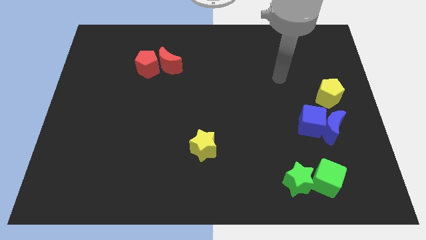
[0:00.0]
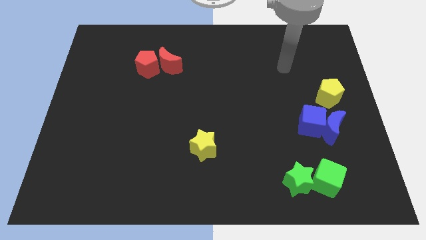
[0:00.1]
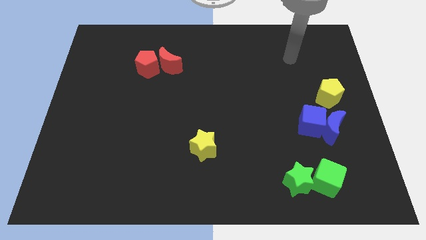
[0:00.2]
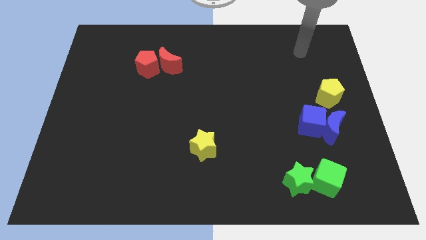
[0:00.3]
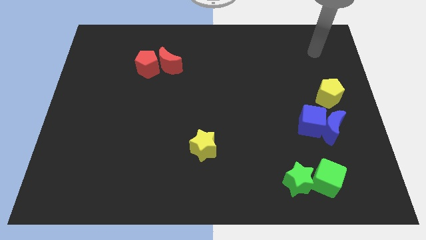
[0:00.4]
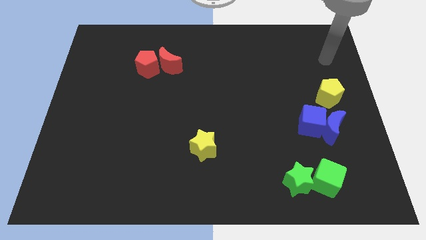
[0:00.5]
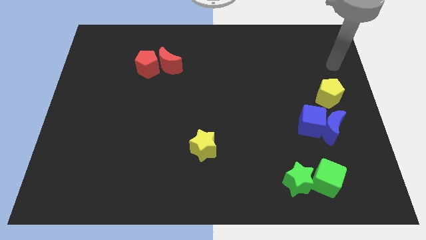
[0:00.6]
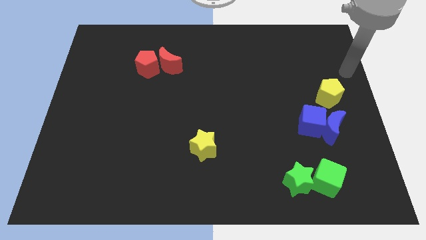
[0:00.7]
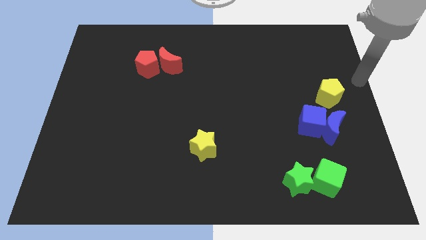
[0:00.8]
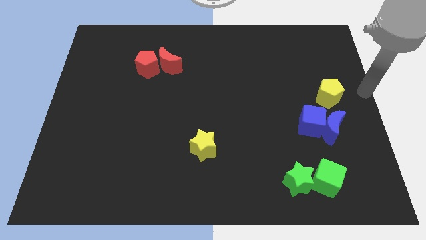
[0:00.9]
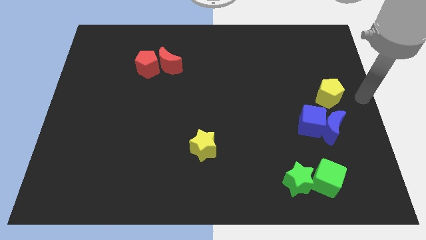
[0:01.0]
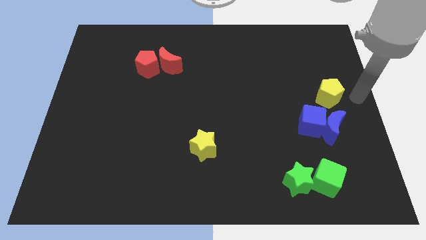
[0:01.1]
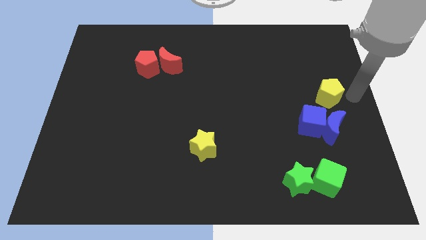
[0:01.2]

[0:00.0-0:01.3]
move your arm right to the yellow pentagon

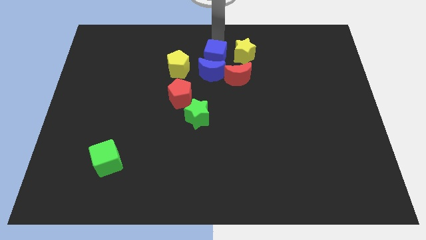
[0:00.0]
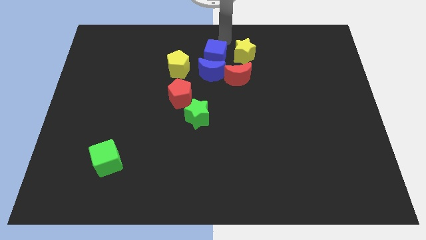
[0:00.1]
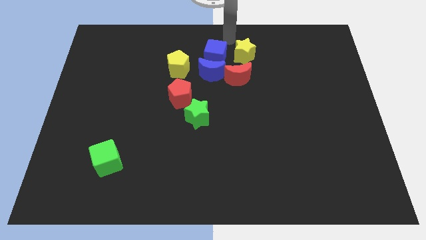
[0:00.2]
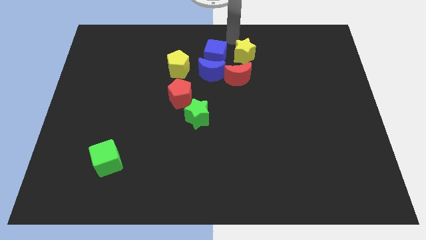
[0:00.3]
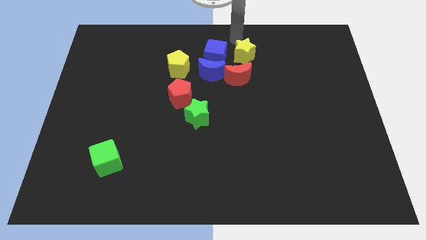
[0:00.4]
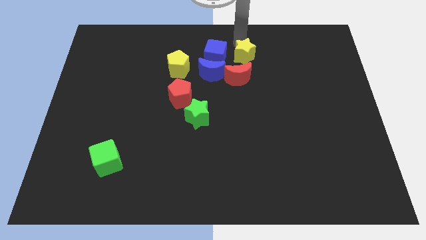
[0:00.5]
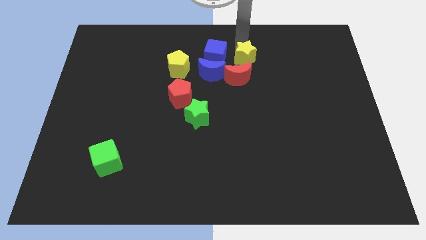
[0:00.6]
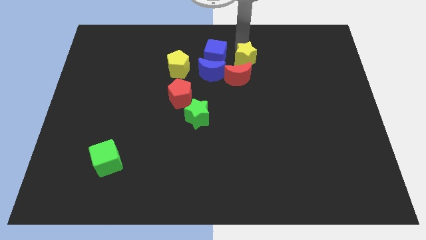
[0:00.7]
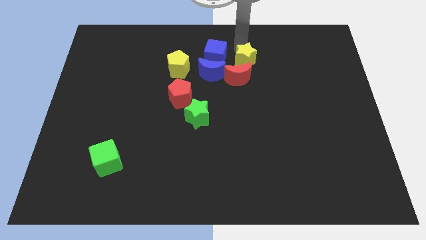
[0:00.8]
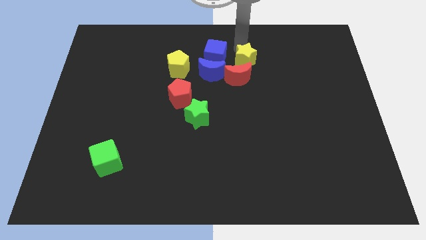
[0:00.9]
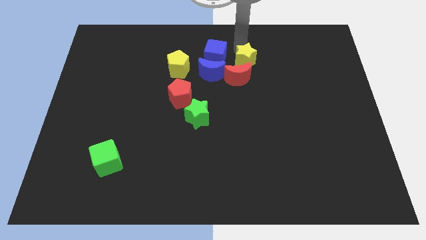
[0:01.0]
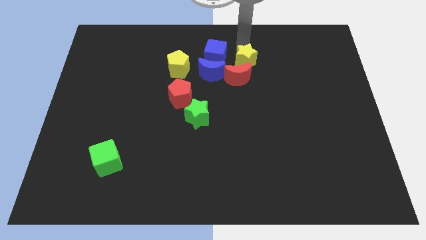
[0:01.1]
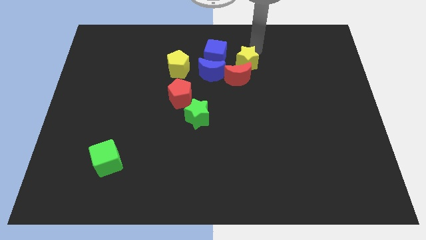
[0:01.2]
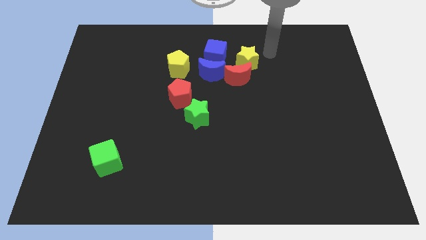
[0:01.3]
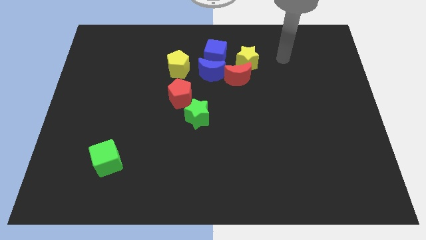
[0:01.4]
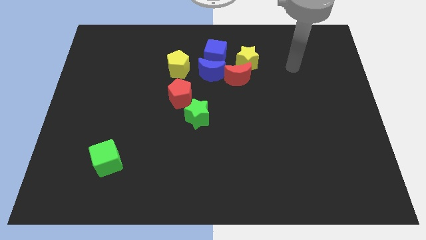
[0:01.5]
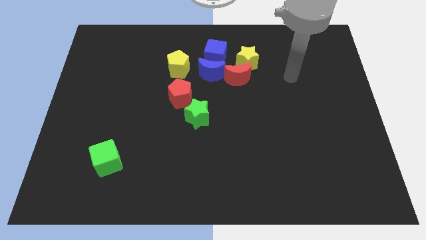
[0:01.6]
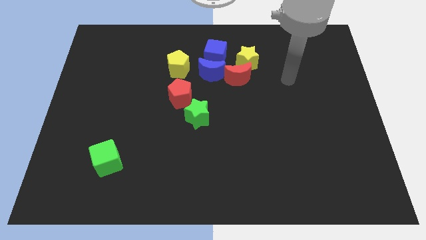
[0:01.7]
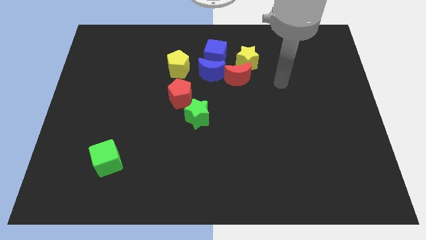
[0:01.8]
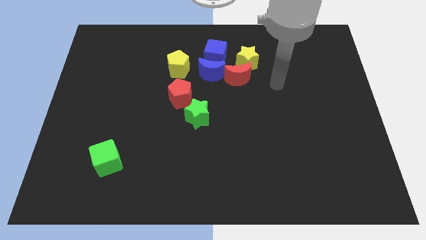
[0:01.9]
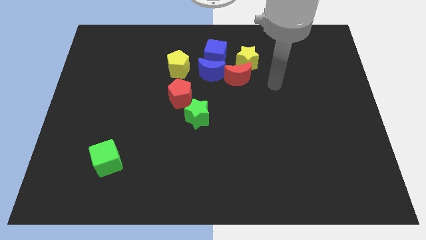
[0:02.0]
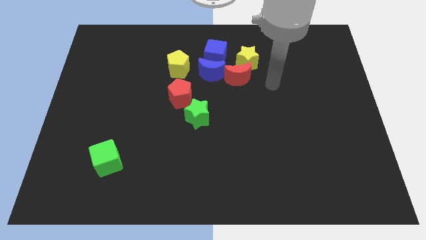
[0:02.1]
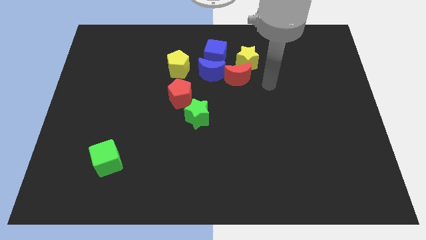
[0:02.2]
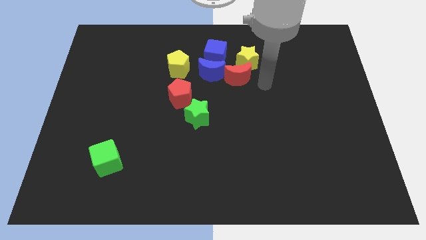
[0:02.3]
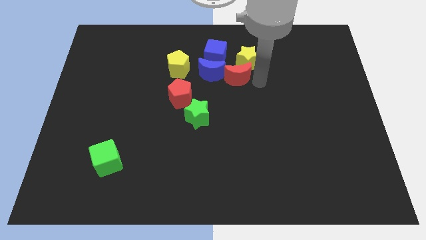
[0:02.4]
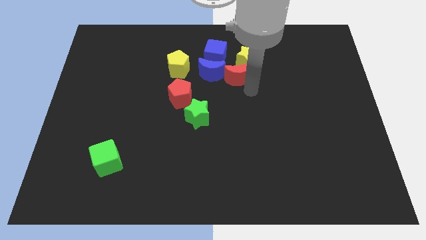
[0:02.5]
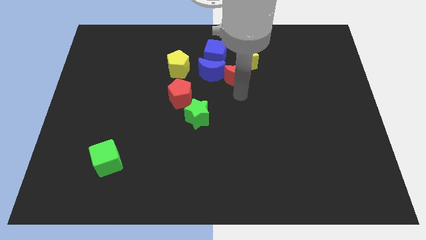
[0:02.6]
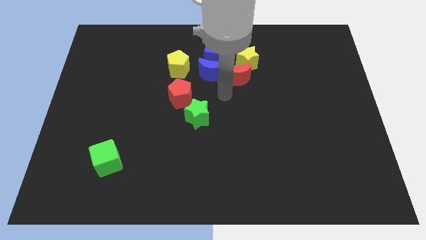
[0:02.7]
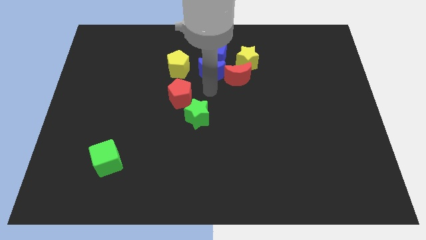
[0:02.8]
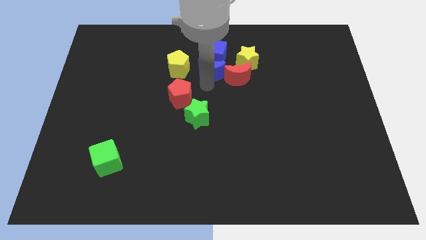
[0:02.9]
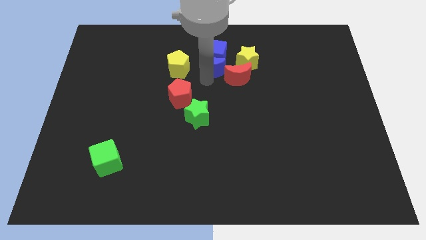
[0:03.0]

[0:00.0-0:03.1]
push yellow star into the red moon

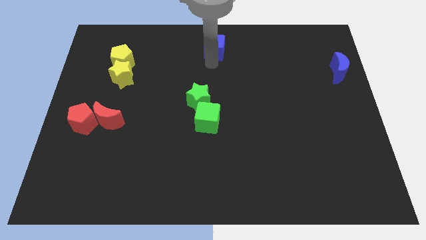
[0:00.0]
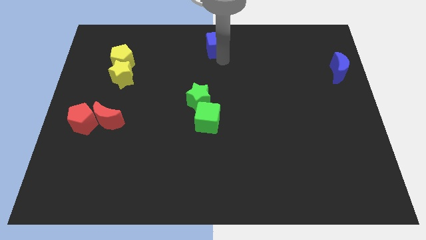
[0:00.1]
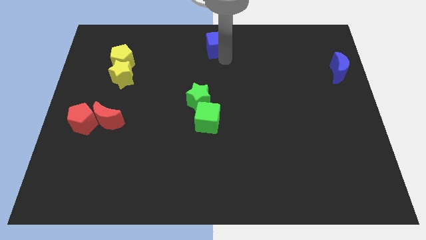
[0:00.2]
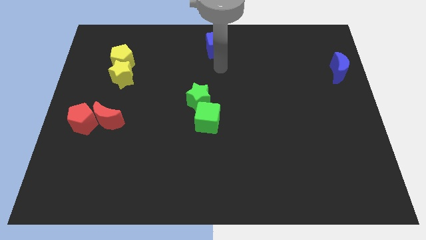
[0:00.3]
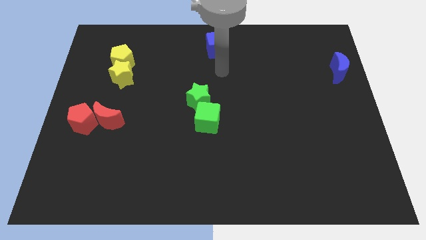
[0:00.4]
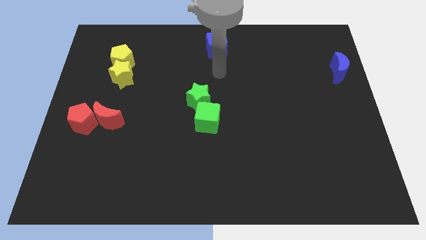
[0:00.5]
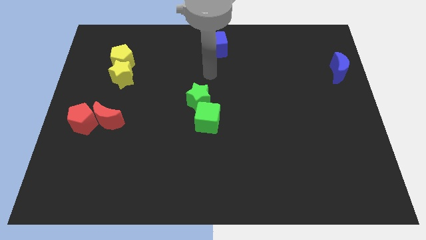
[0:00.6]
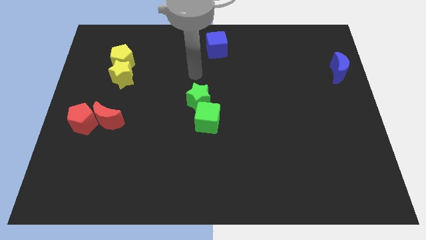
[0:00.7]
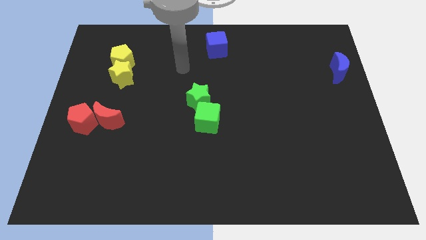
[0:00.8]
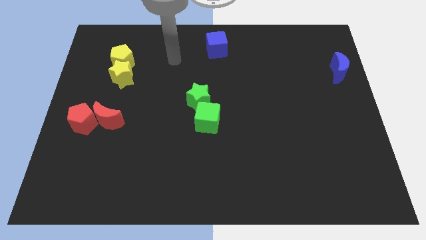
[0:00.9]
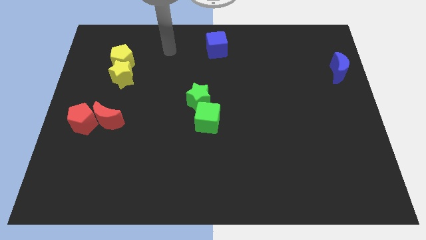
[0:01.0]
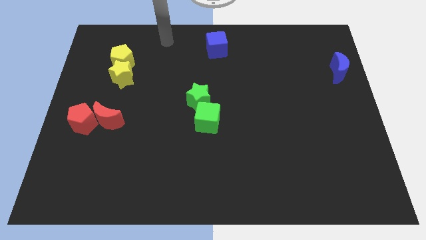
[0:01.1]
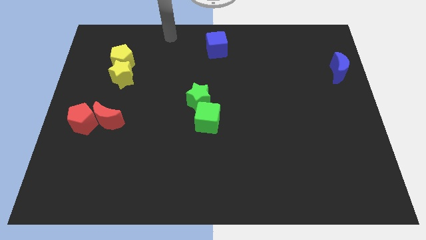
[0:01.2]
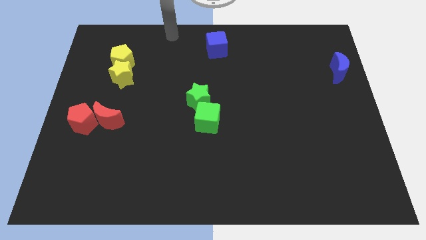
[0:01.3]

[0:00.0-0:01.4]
move your arm away from the blue cube

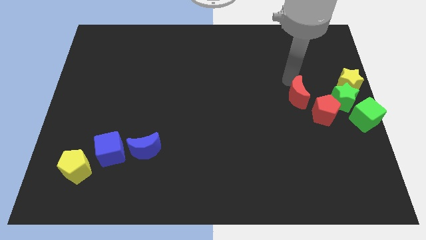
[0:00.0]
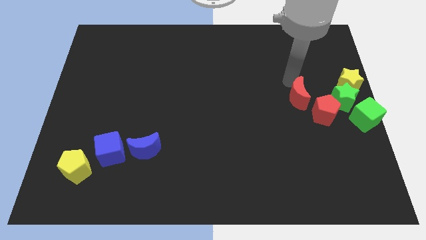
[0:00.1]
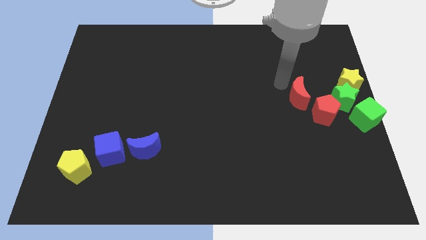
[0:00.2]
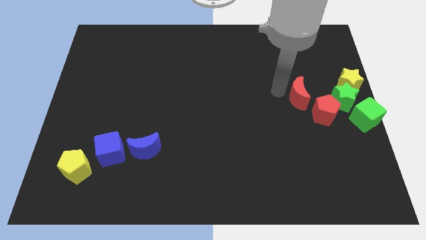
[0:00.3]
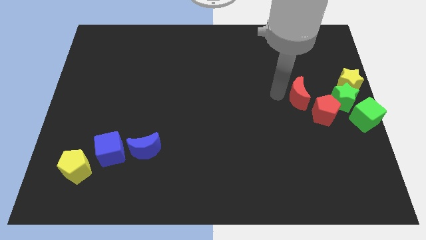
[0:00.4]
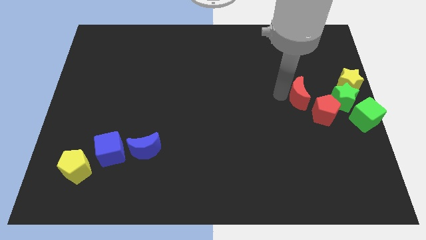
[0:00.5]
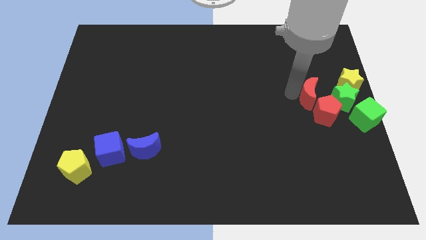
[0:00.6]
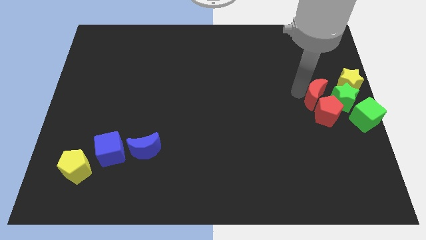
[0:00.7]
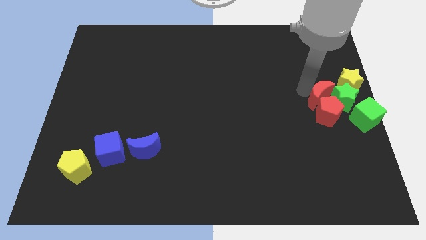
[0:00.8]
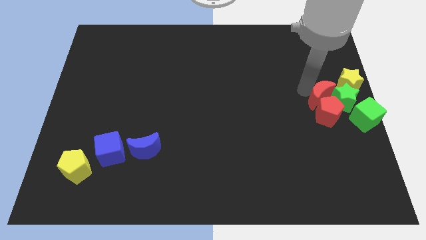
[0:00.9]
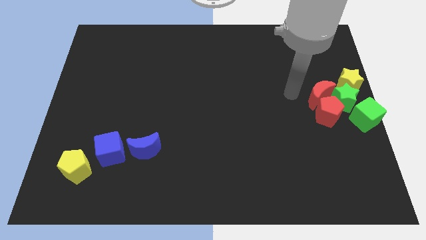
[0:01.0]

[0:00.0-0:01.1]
push the red crescent to the top of the red pentagon

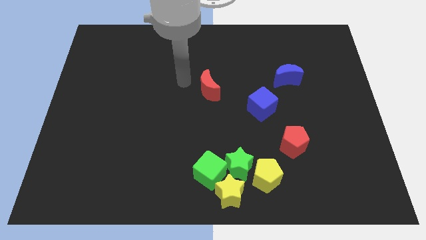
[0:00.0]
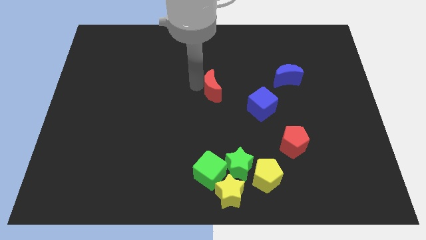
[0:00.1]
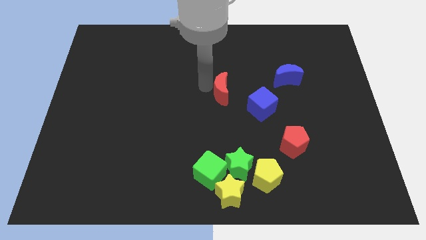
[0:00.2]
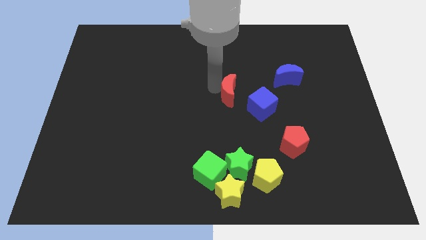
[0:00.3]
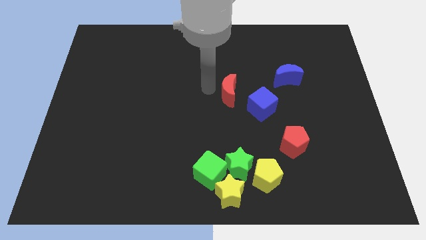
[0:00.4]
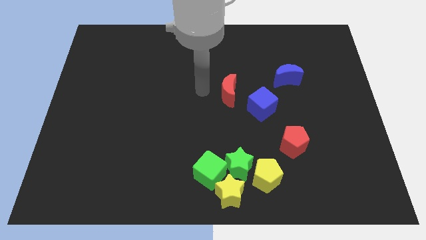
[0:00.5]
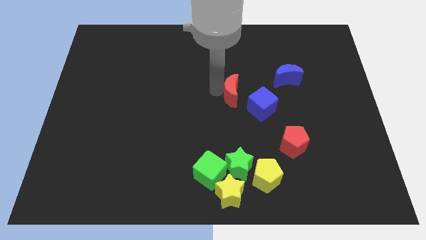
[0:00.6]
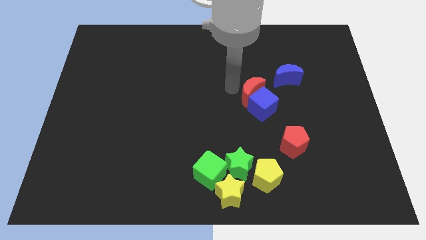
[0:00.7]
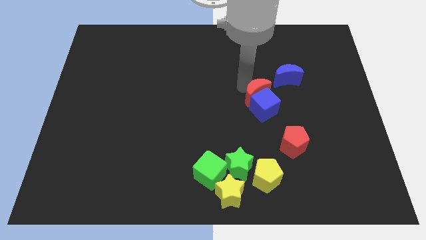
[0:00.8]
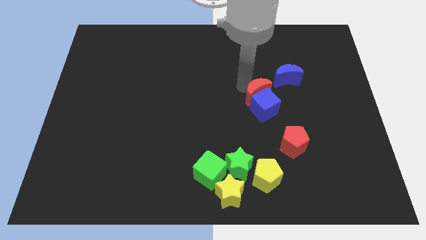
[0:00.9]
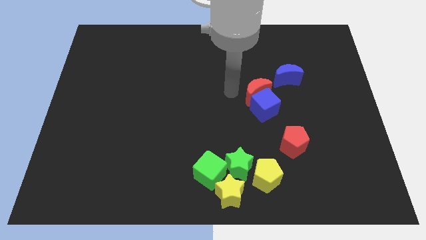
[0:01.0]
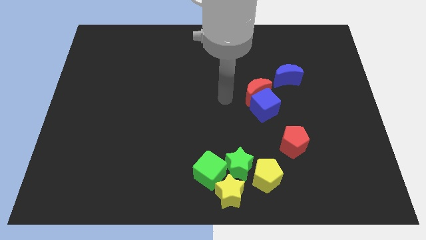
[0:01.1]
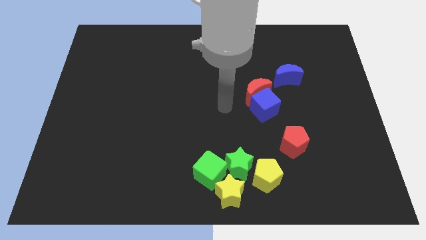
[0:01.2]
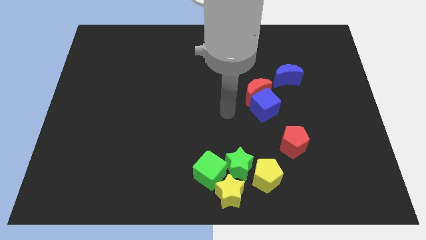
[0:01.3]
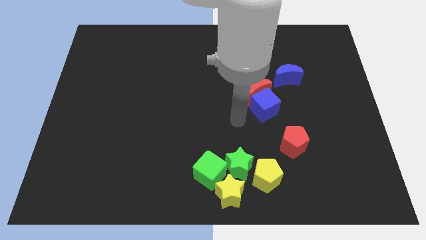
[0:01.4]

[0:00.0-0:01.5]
move the red crescent above the blue cube

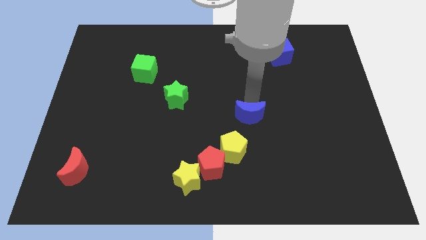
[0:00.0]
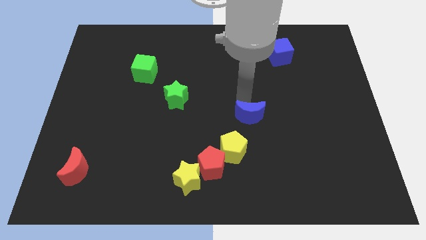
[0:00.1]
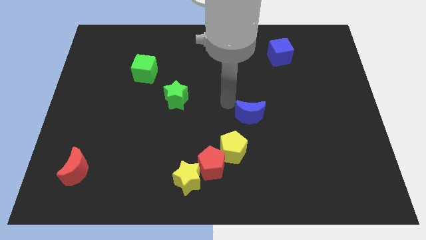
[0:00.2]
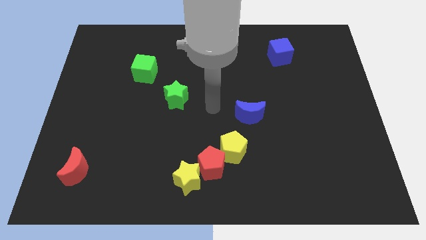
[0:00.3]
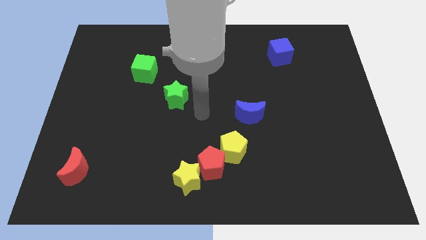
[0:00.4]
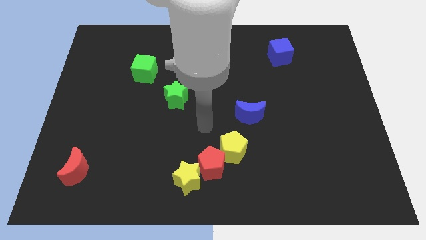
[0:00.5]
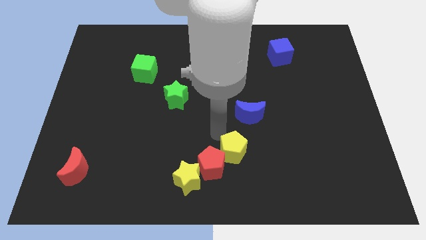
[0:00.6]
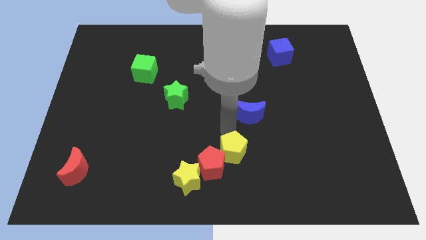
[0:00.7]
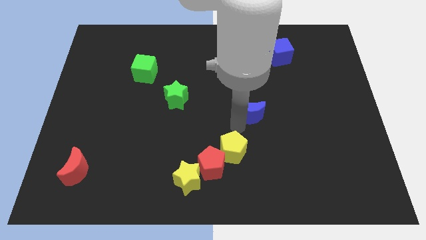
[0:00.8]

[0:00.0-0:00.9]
move your arm to the bottom of blue moon
